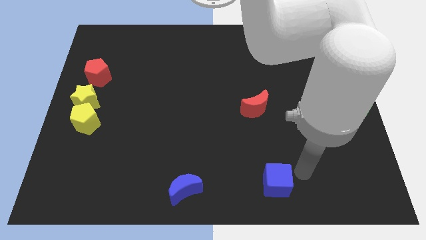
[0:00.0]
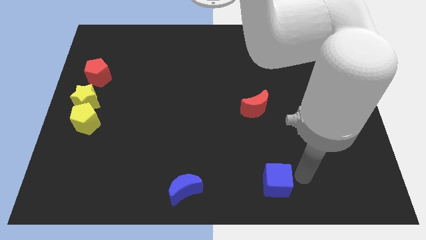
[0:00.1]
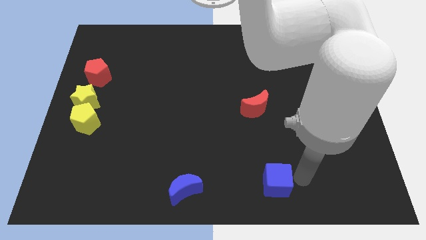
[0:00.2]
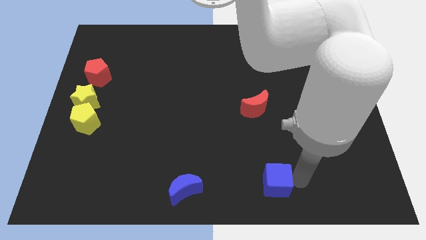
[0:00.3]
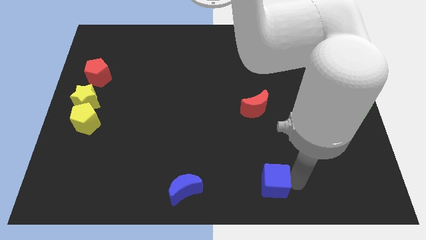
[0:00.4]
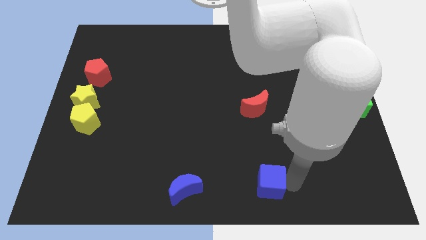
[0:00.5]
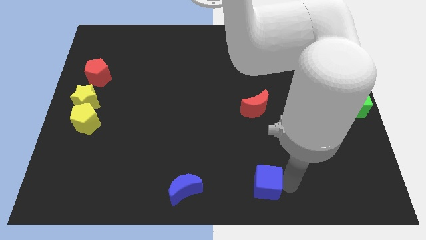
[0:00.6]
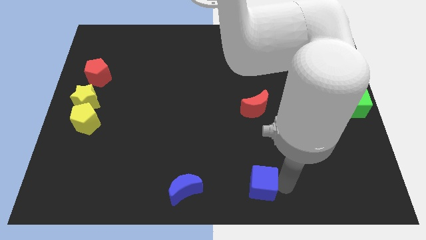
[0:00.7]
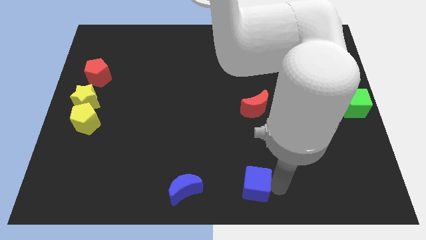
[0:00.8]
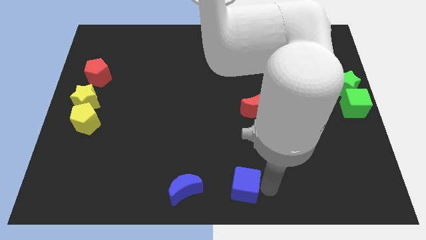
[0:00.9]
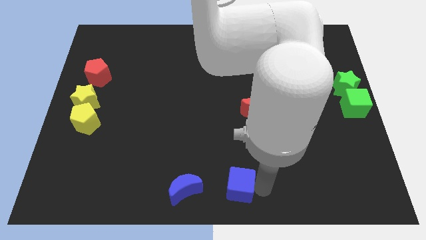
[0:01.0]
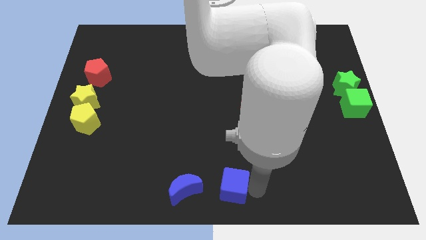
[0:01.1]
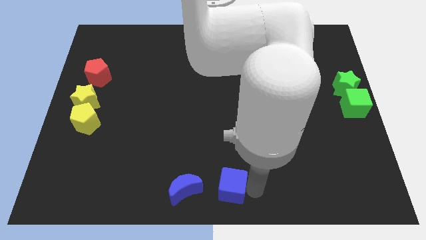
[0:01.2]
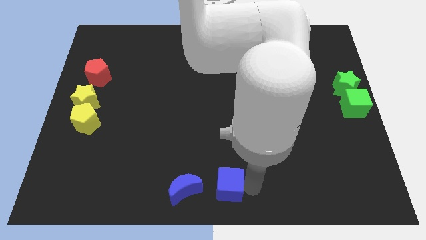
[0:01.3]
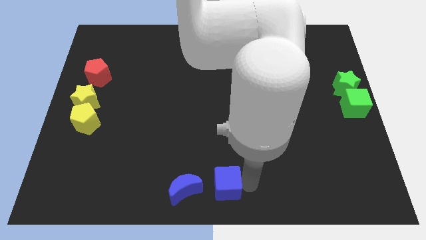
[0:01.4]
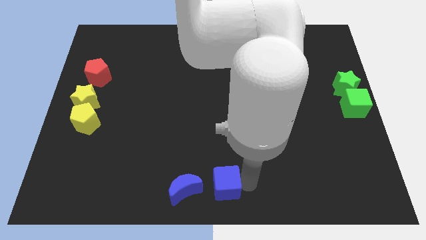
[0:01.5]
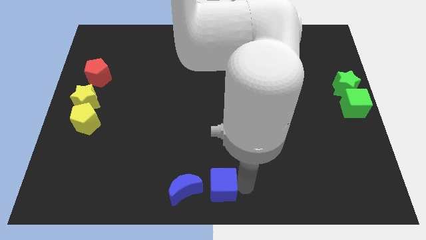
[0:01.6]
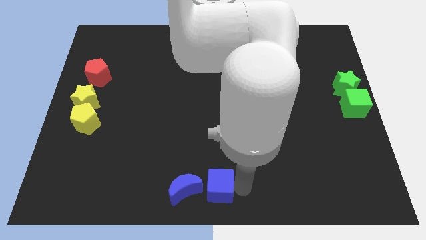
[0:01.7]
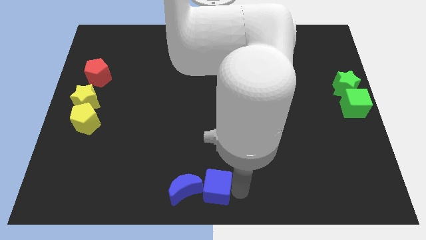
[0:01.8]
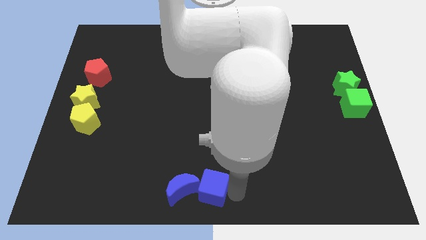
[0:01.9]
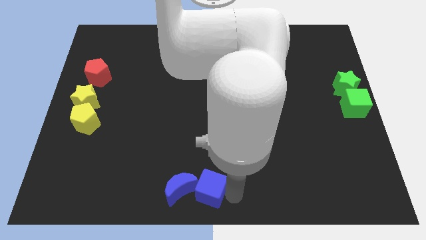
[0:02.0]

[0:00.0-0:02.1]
push the blue cube into the blue crescent

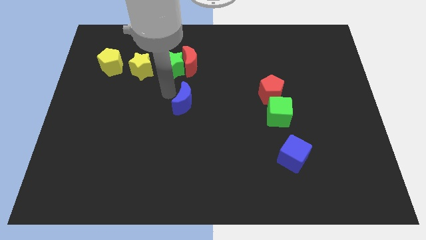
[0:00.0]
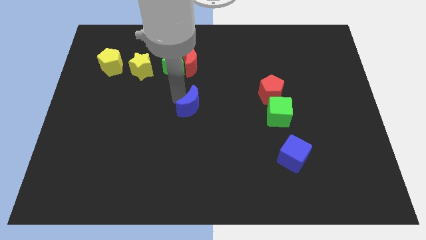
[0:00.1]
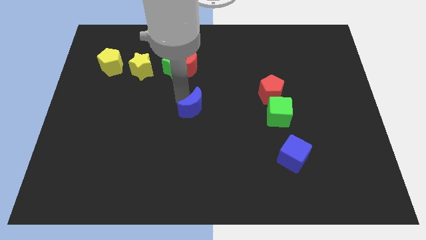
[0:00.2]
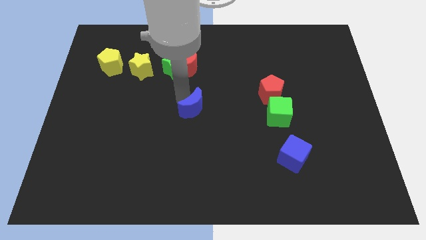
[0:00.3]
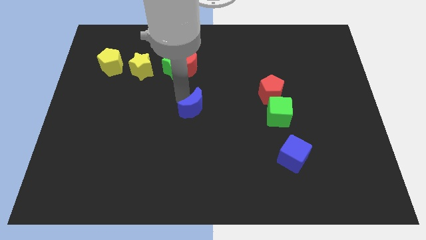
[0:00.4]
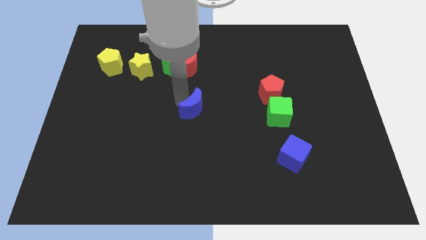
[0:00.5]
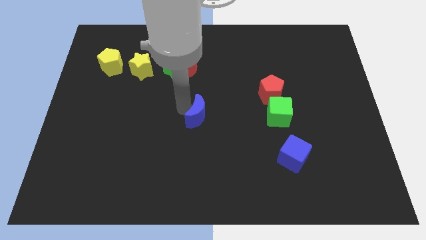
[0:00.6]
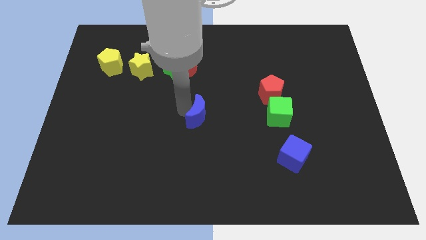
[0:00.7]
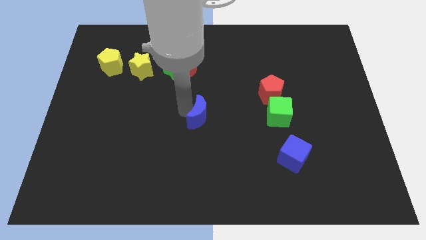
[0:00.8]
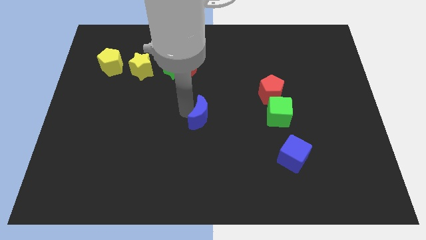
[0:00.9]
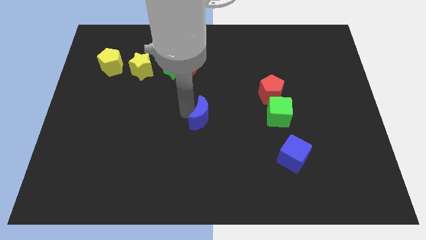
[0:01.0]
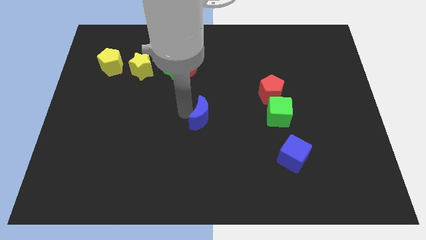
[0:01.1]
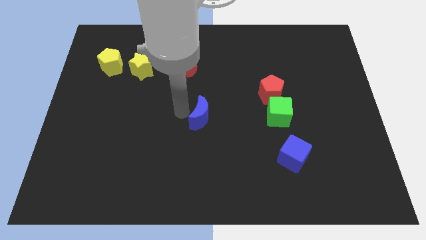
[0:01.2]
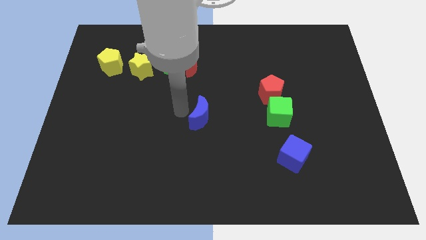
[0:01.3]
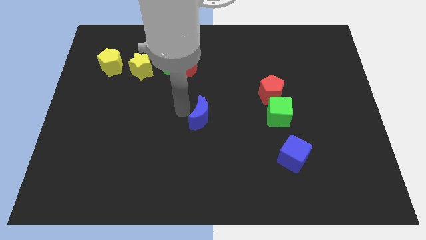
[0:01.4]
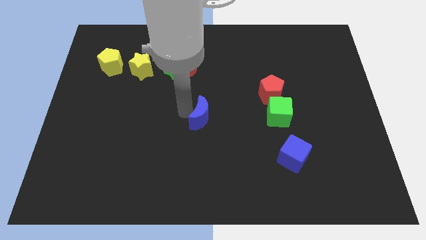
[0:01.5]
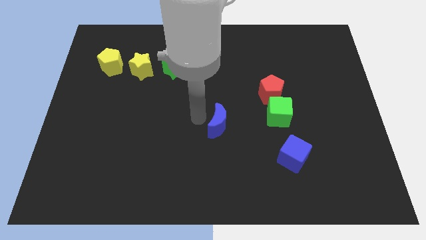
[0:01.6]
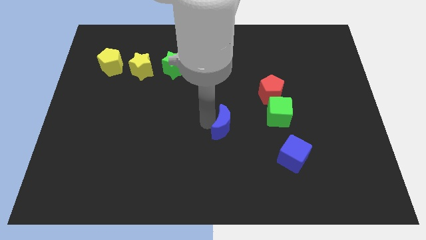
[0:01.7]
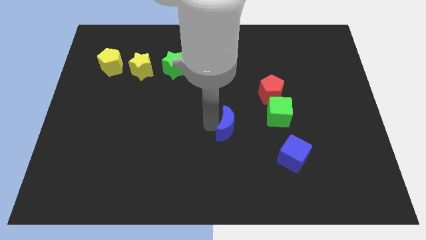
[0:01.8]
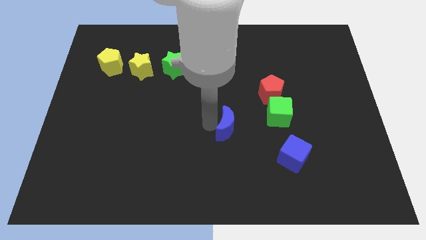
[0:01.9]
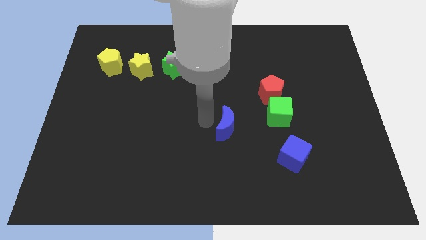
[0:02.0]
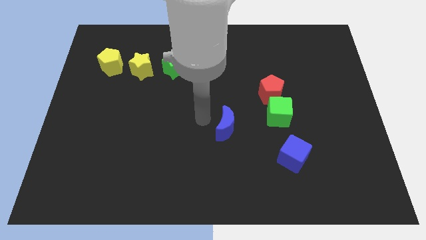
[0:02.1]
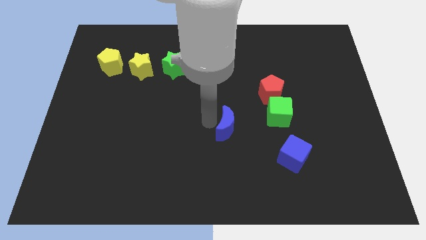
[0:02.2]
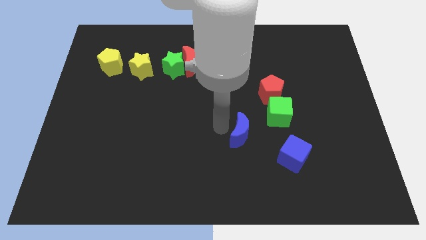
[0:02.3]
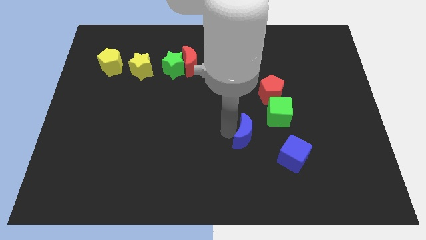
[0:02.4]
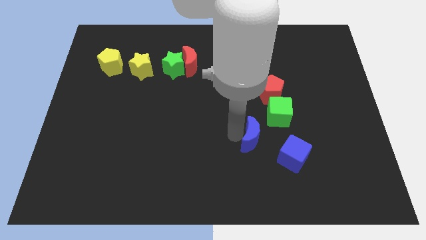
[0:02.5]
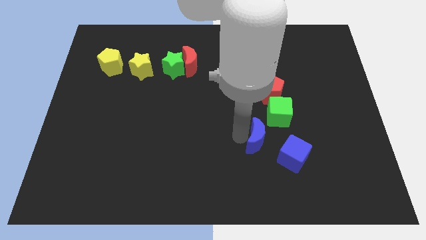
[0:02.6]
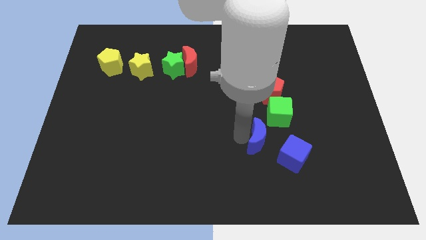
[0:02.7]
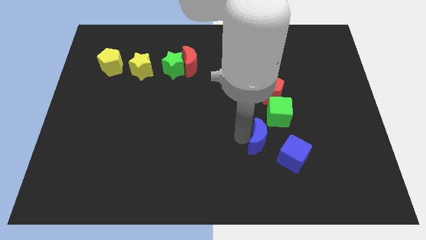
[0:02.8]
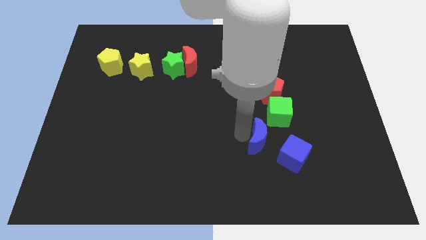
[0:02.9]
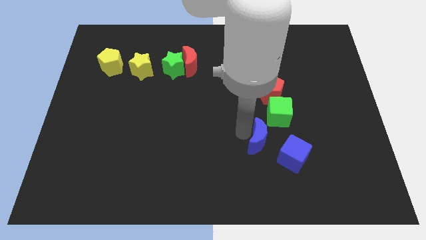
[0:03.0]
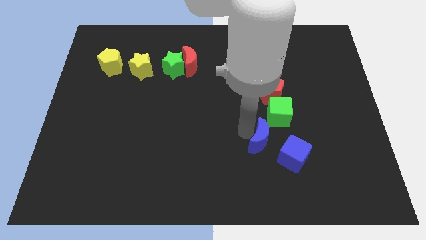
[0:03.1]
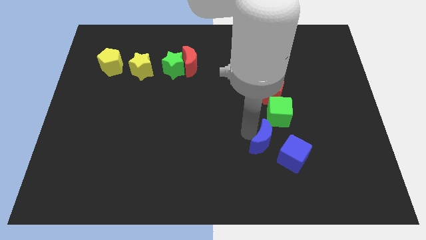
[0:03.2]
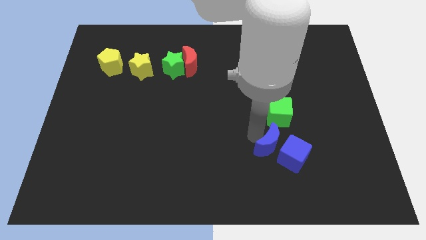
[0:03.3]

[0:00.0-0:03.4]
place the blue crescent near to blue cube

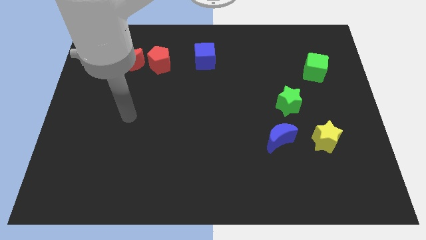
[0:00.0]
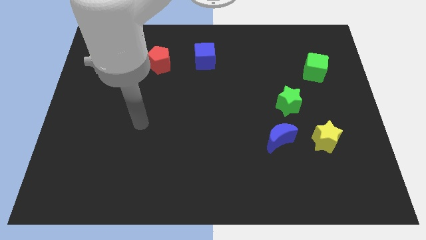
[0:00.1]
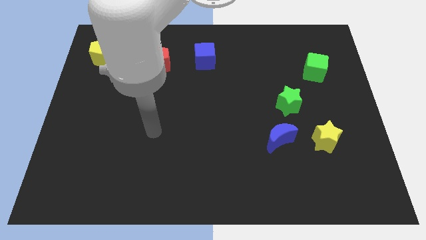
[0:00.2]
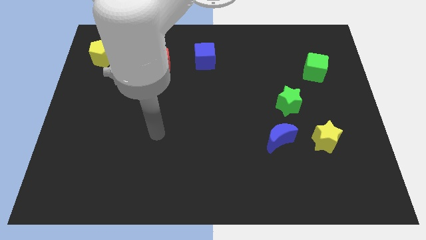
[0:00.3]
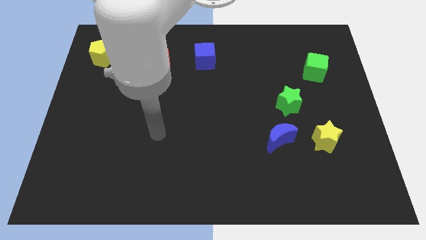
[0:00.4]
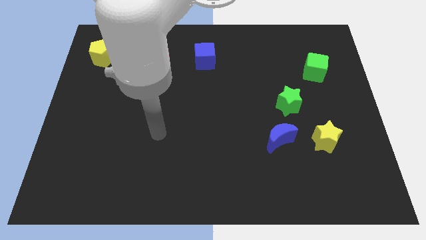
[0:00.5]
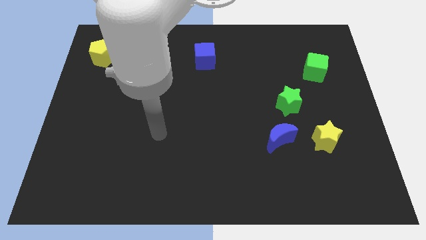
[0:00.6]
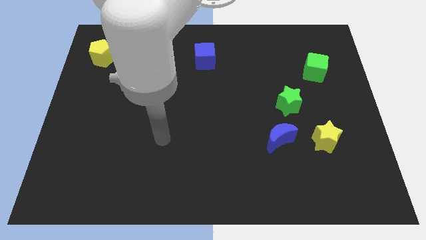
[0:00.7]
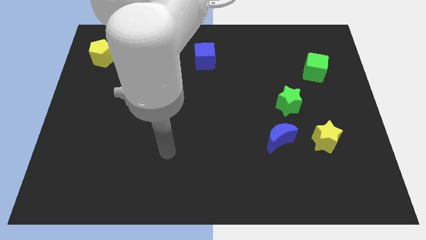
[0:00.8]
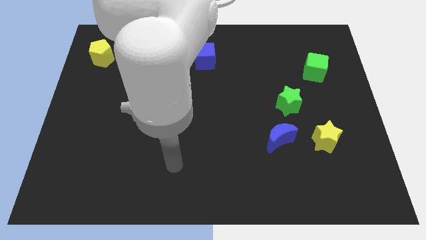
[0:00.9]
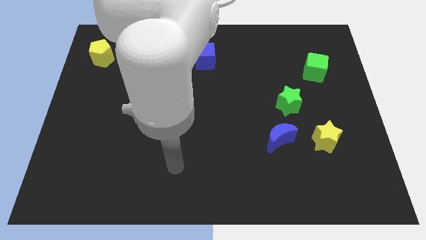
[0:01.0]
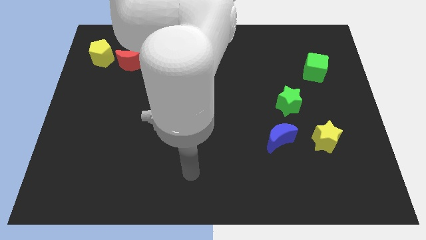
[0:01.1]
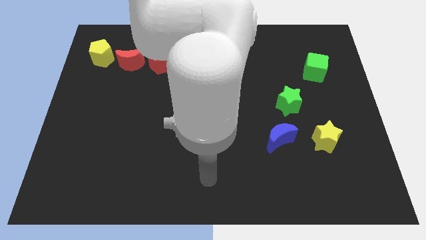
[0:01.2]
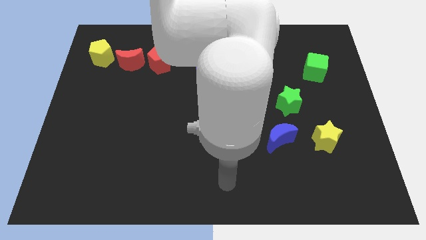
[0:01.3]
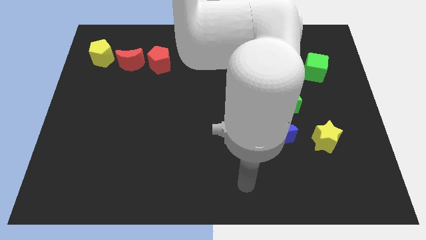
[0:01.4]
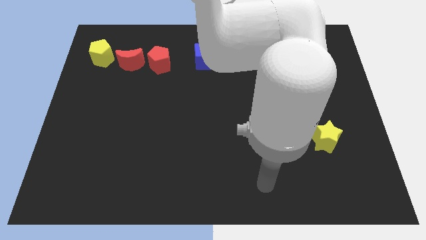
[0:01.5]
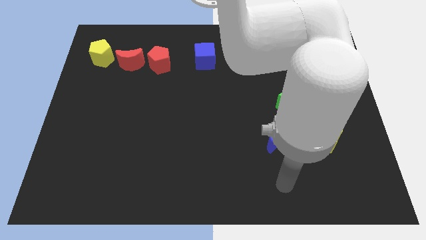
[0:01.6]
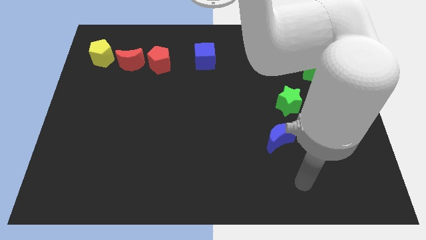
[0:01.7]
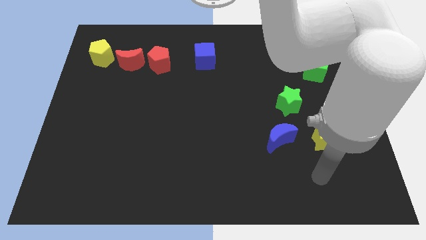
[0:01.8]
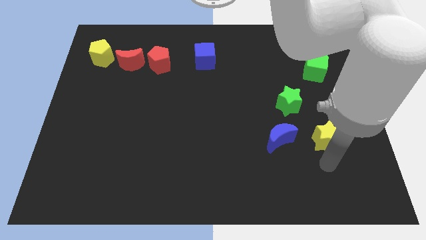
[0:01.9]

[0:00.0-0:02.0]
place your arm below the yellow star

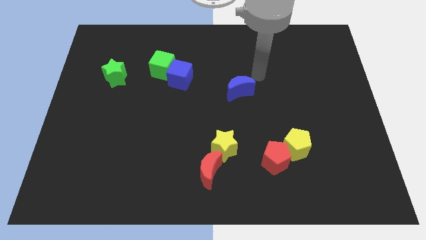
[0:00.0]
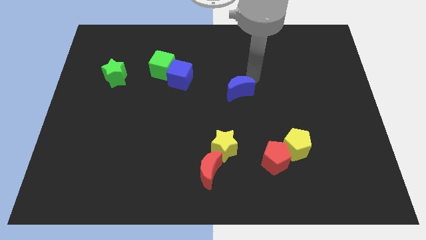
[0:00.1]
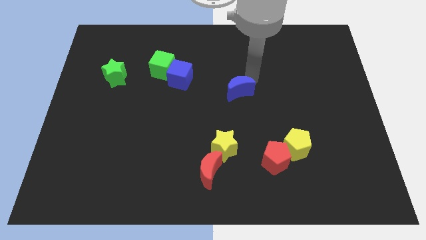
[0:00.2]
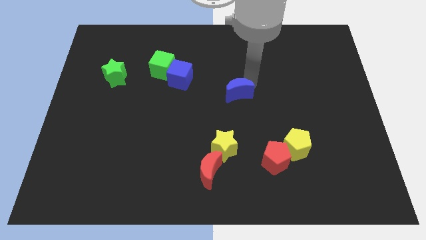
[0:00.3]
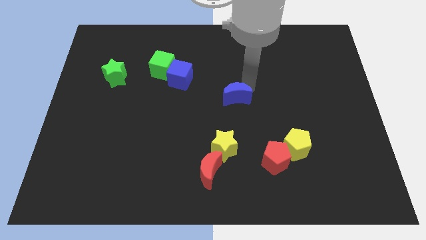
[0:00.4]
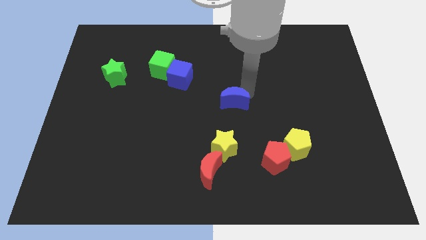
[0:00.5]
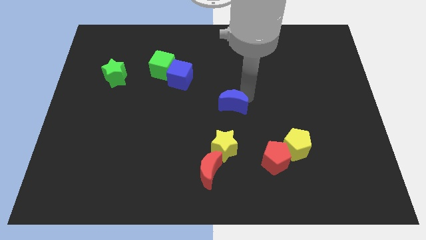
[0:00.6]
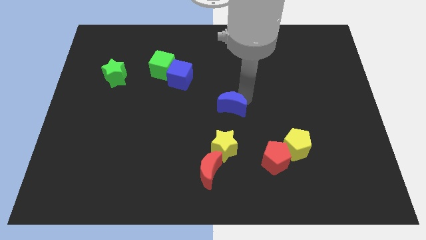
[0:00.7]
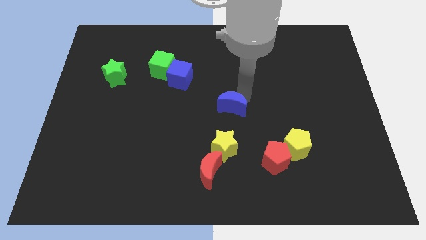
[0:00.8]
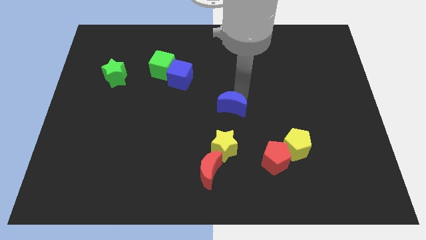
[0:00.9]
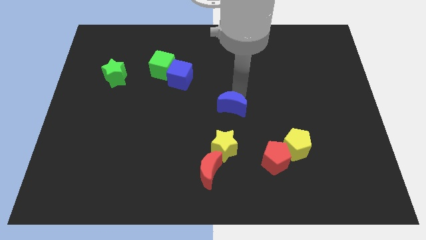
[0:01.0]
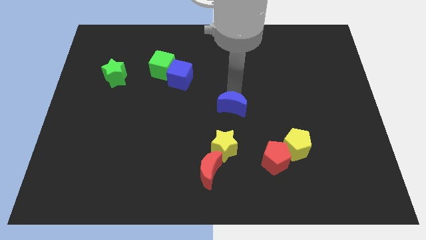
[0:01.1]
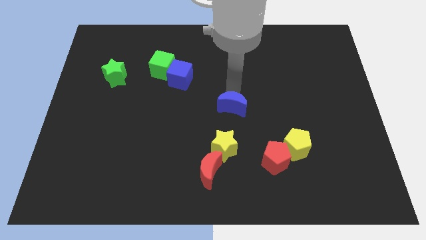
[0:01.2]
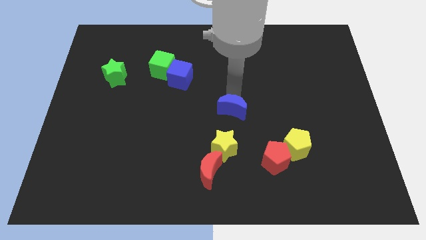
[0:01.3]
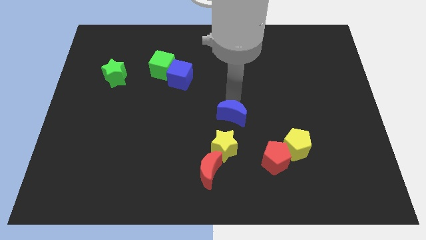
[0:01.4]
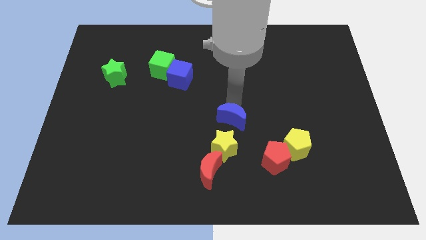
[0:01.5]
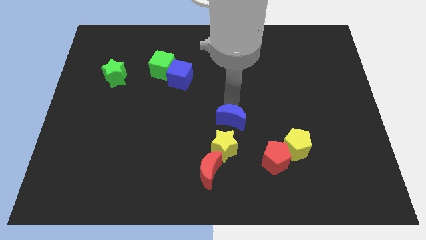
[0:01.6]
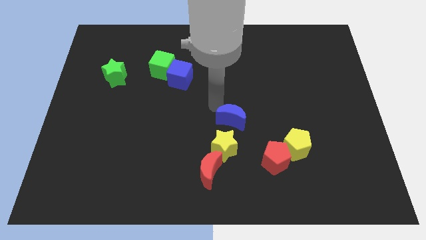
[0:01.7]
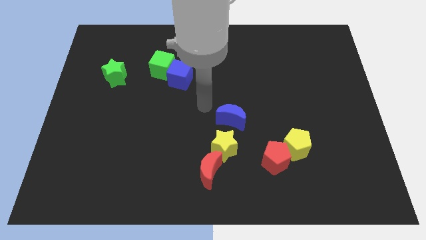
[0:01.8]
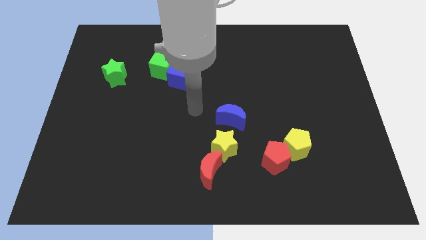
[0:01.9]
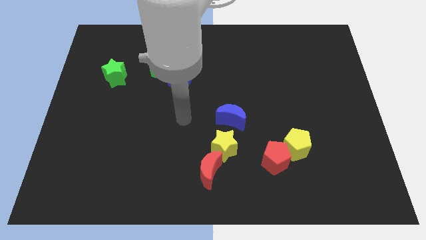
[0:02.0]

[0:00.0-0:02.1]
push blue moon above the yellow star
